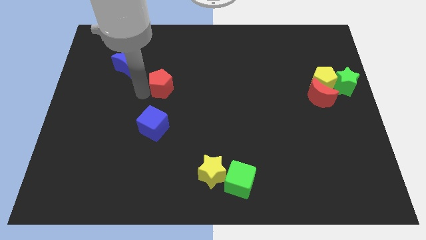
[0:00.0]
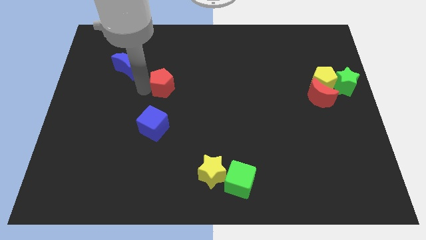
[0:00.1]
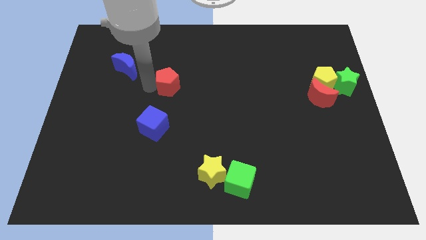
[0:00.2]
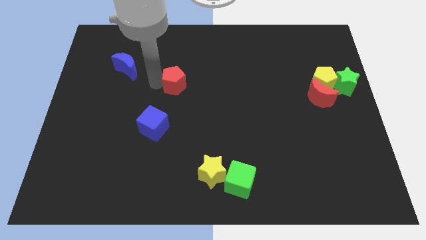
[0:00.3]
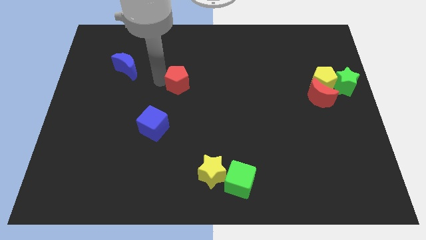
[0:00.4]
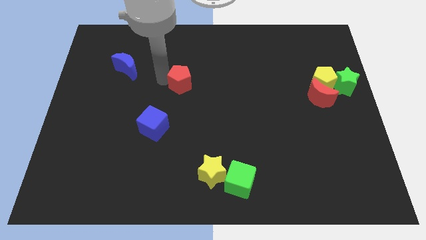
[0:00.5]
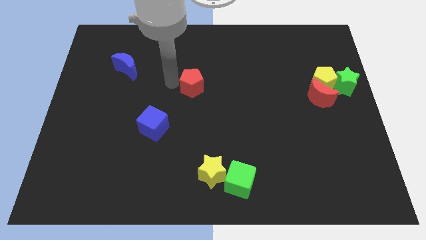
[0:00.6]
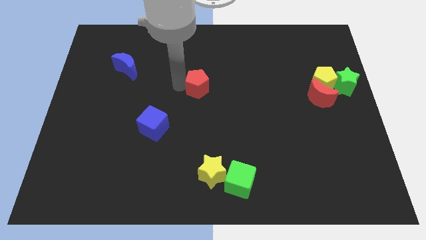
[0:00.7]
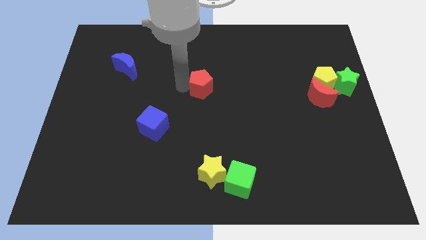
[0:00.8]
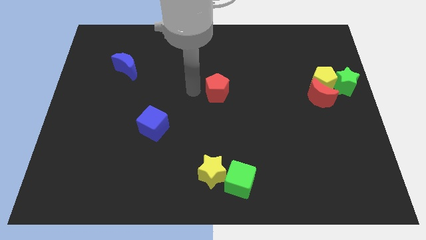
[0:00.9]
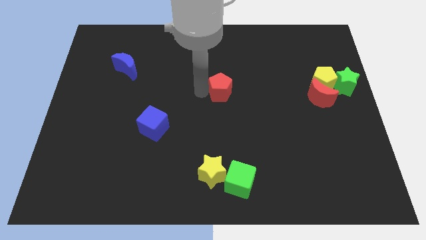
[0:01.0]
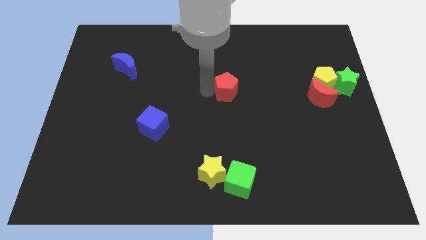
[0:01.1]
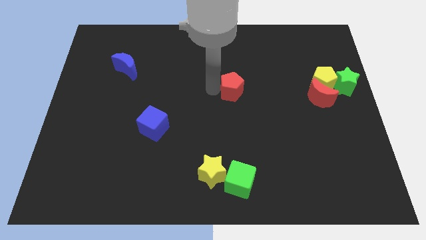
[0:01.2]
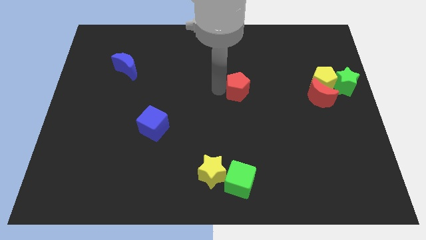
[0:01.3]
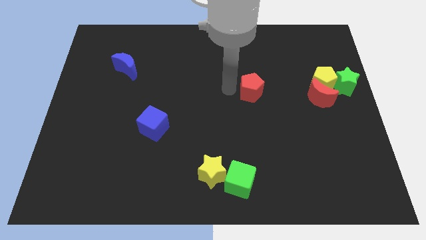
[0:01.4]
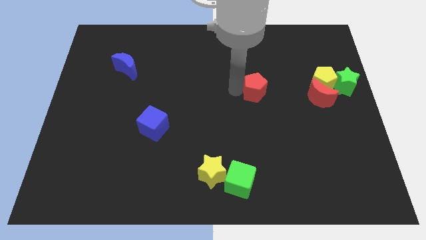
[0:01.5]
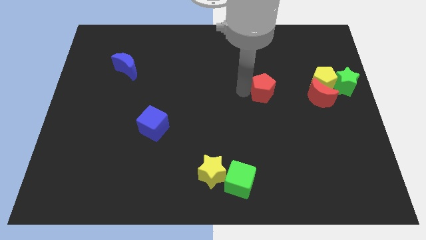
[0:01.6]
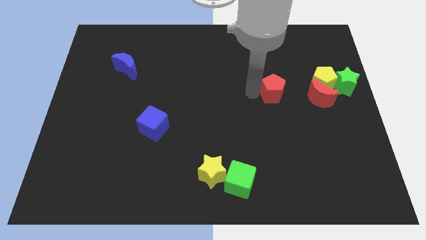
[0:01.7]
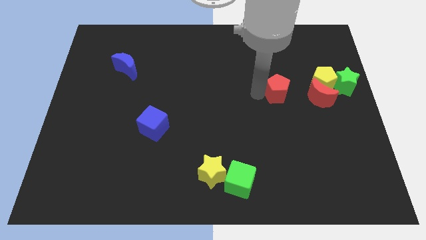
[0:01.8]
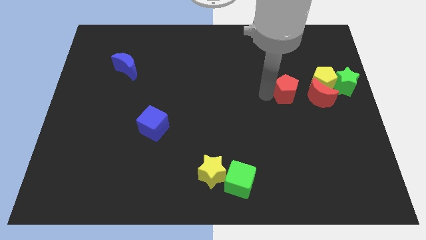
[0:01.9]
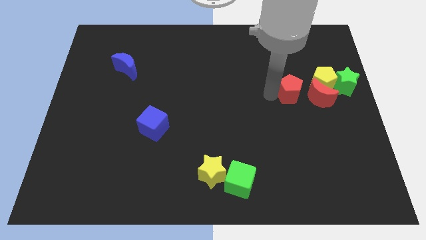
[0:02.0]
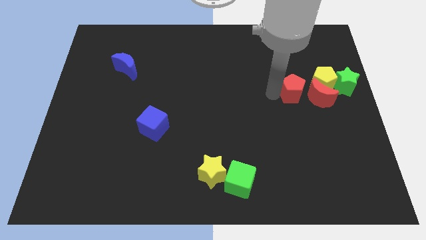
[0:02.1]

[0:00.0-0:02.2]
place red pentagon near red crescent

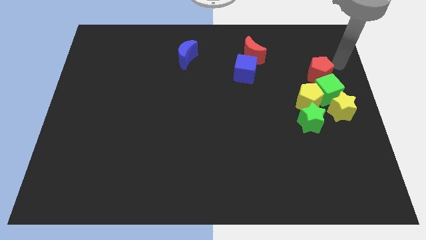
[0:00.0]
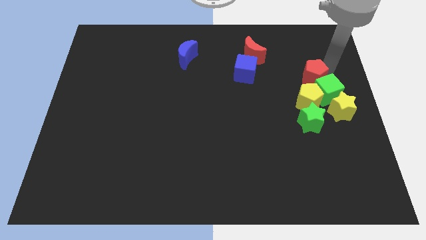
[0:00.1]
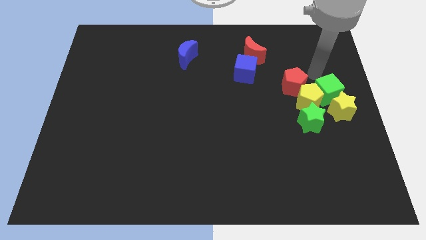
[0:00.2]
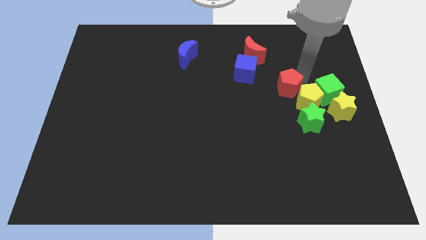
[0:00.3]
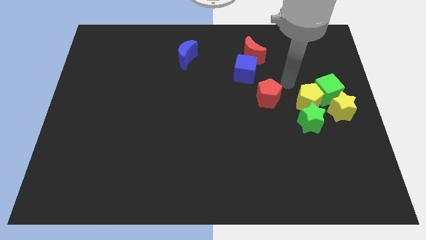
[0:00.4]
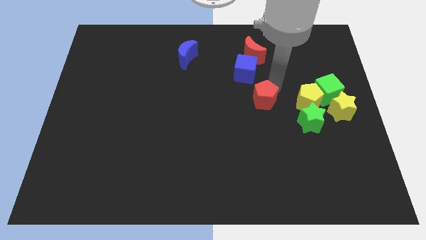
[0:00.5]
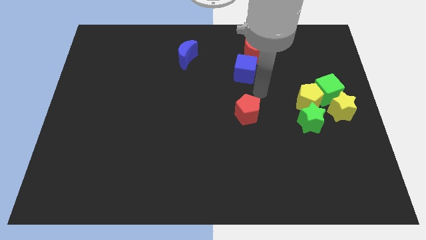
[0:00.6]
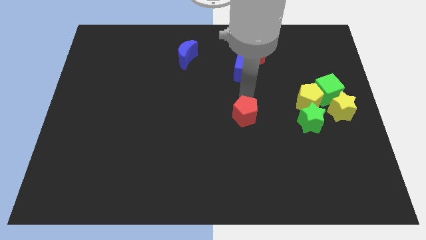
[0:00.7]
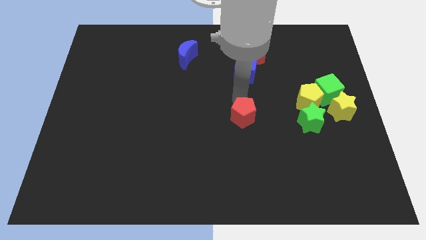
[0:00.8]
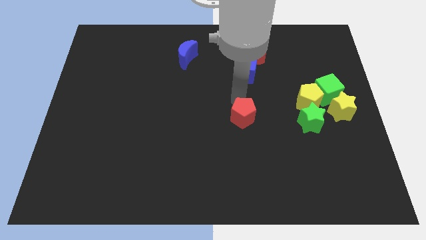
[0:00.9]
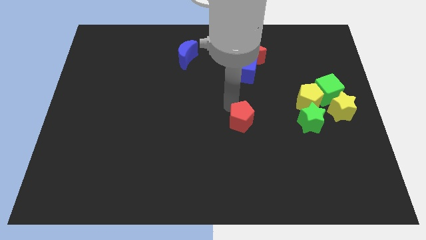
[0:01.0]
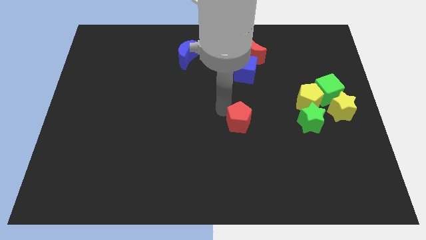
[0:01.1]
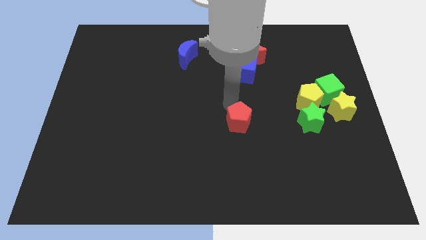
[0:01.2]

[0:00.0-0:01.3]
place the red pentagon vertically to the bottom side of the blue cube

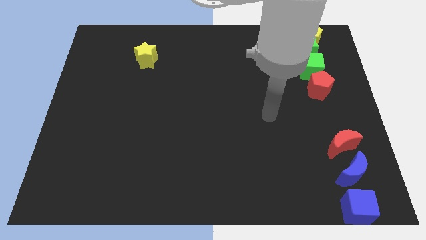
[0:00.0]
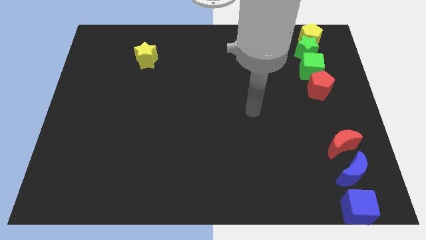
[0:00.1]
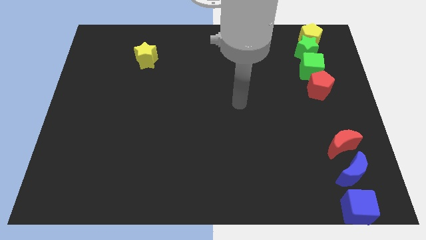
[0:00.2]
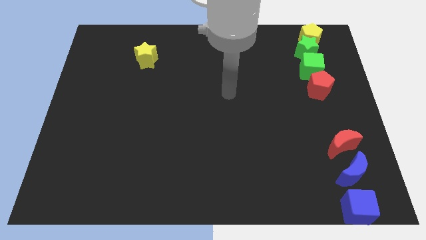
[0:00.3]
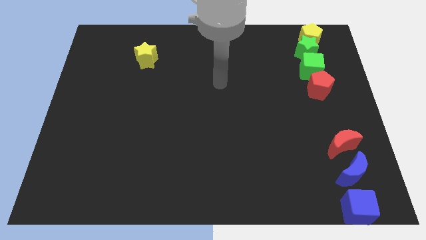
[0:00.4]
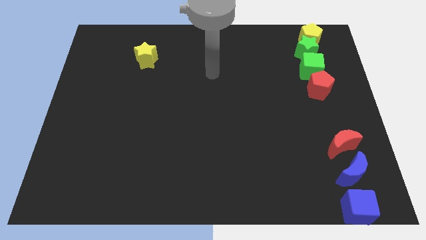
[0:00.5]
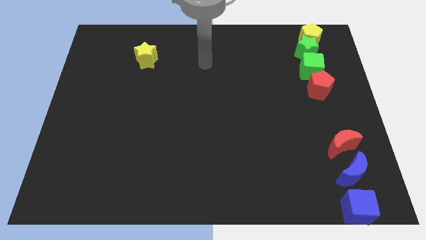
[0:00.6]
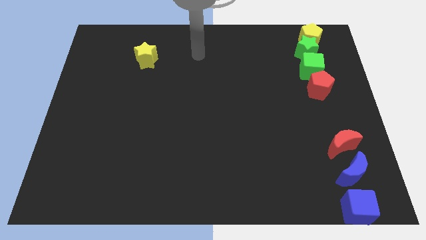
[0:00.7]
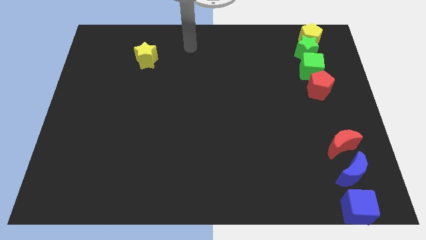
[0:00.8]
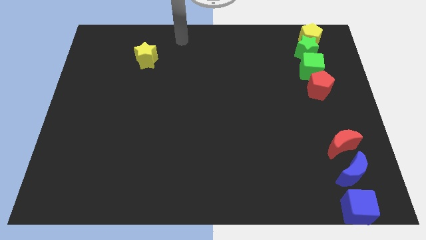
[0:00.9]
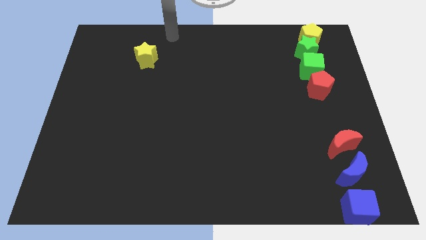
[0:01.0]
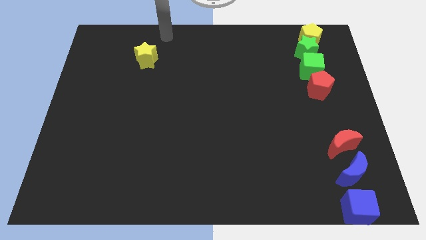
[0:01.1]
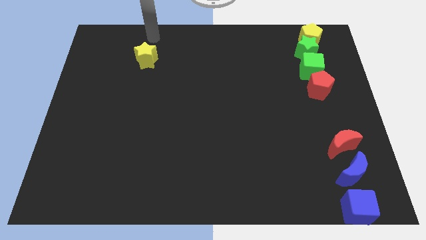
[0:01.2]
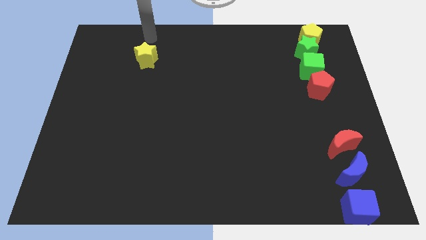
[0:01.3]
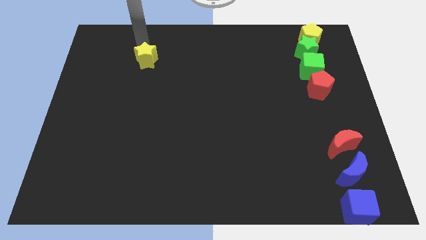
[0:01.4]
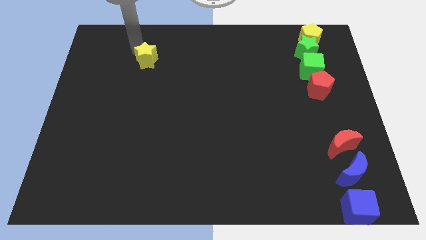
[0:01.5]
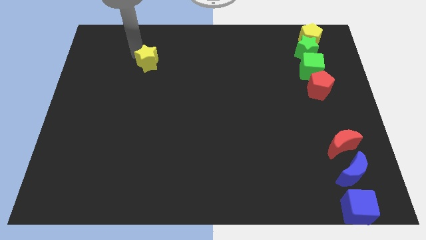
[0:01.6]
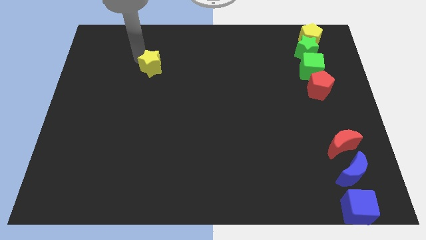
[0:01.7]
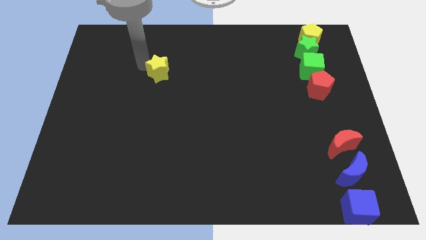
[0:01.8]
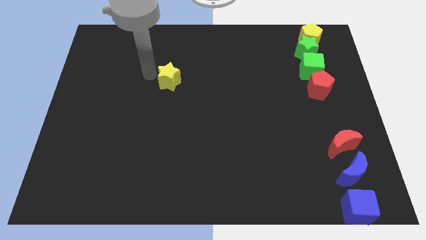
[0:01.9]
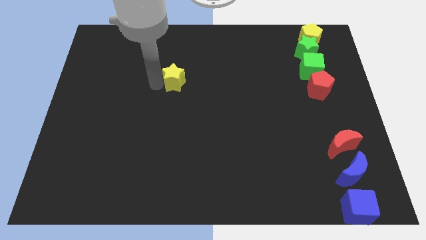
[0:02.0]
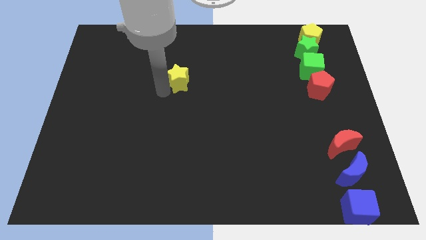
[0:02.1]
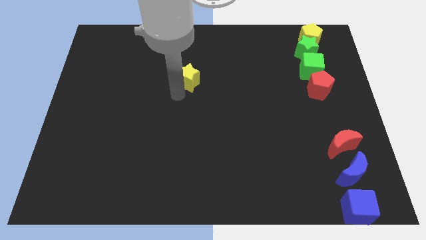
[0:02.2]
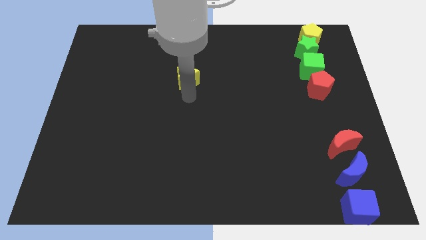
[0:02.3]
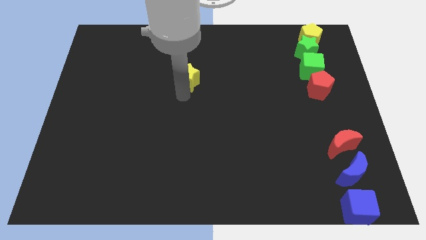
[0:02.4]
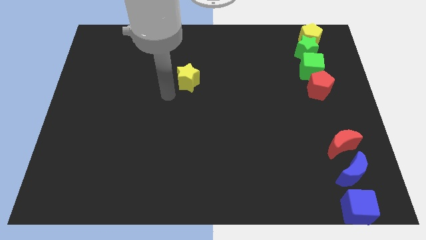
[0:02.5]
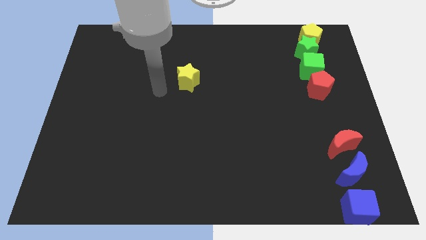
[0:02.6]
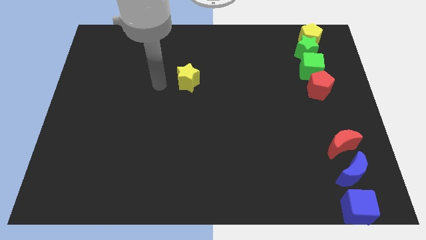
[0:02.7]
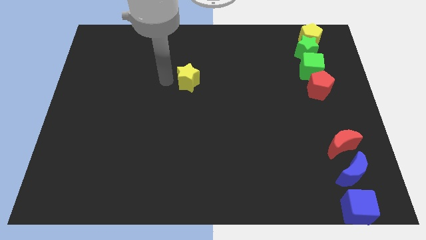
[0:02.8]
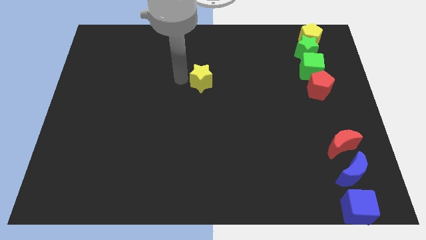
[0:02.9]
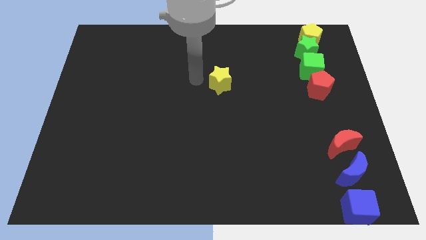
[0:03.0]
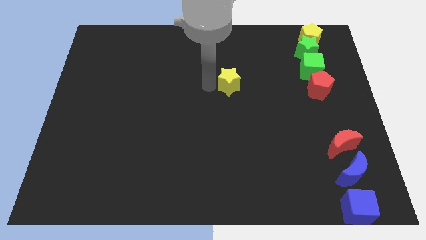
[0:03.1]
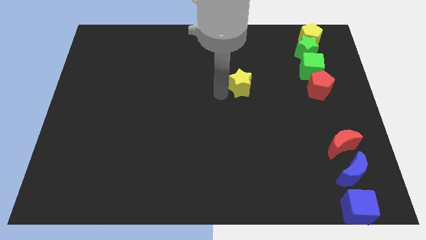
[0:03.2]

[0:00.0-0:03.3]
push the yellow star towards the center of the board

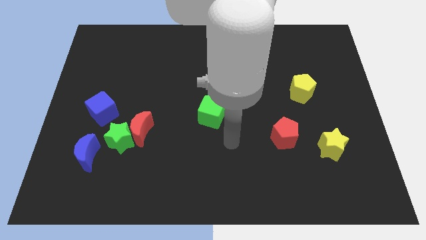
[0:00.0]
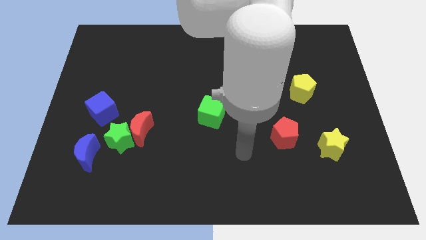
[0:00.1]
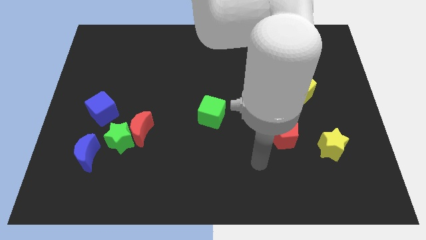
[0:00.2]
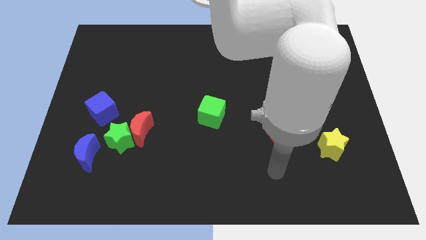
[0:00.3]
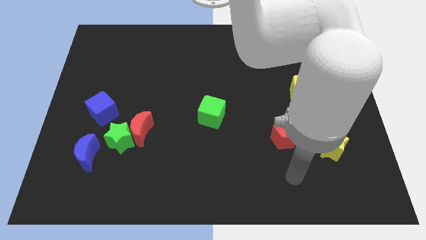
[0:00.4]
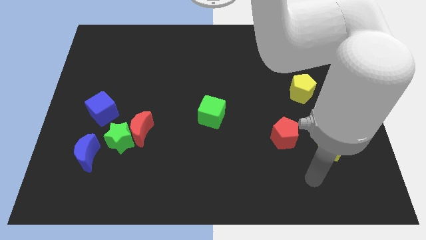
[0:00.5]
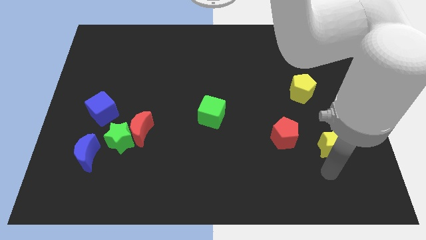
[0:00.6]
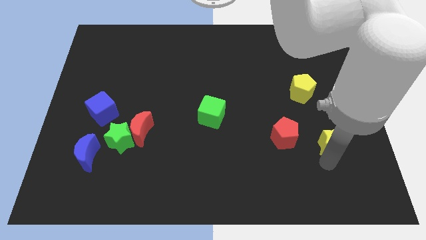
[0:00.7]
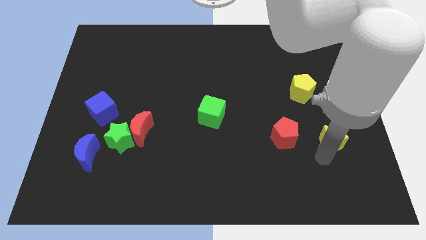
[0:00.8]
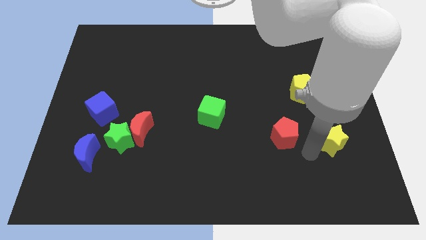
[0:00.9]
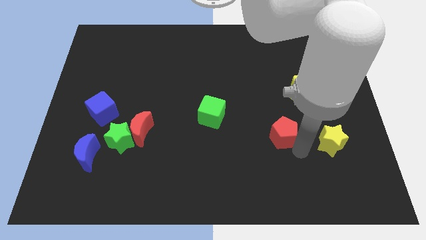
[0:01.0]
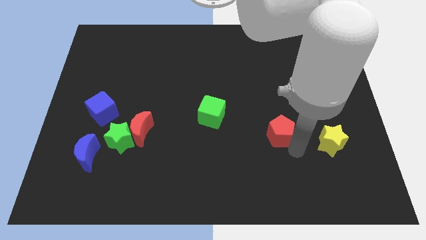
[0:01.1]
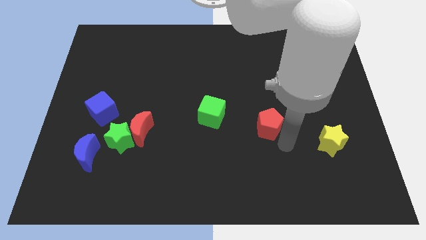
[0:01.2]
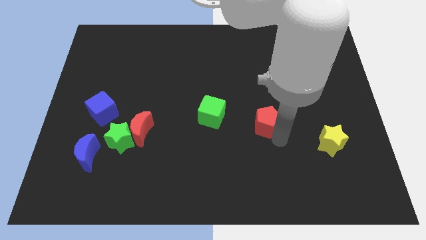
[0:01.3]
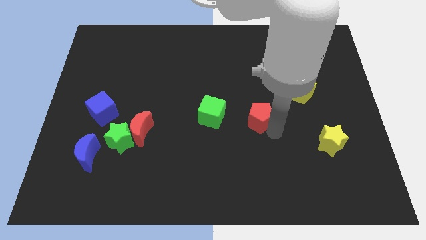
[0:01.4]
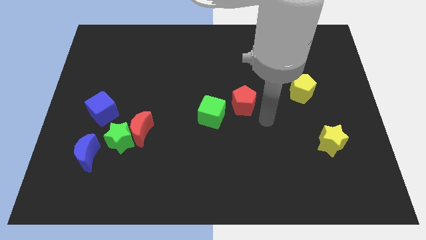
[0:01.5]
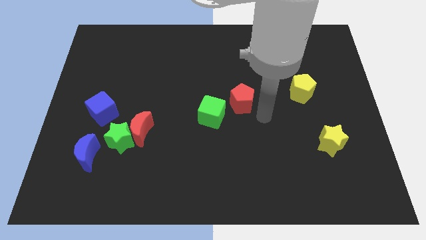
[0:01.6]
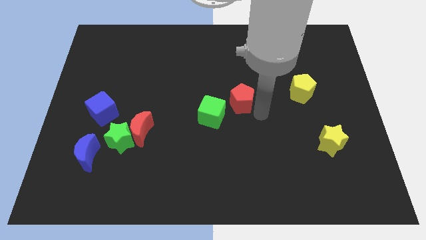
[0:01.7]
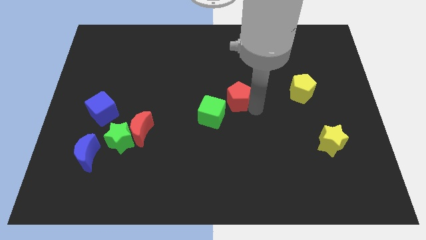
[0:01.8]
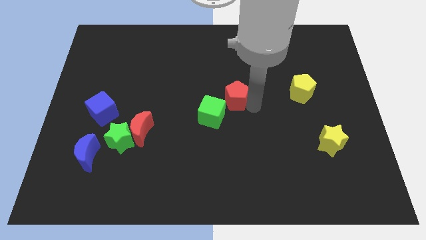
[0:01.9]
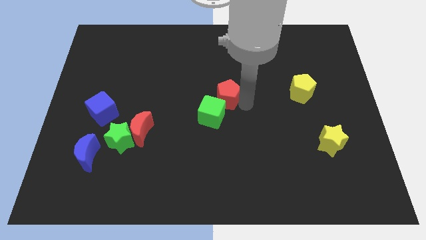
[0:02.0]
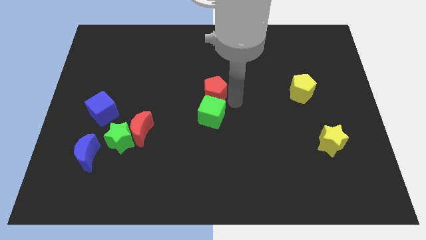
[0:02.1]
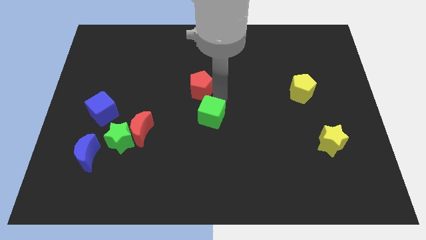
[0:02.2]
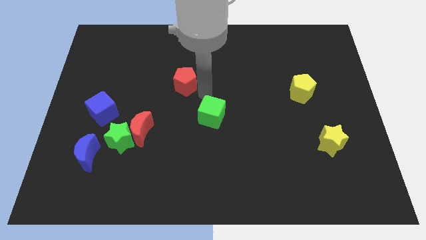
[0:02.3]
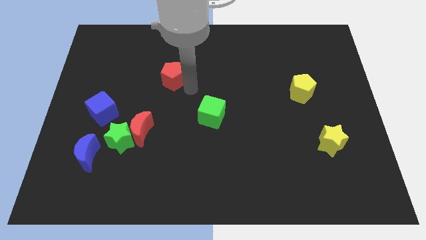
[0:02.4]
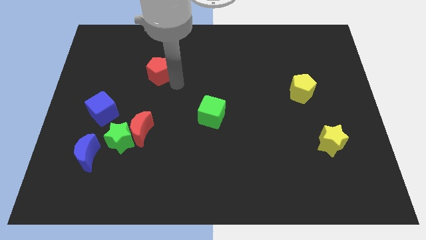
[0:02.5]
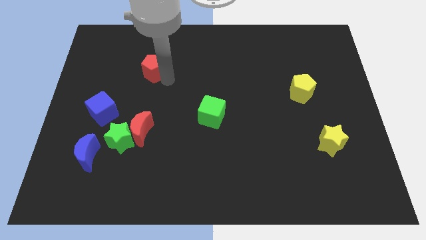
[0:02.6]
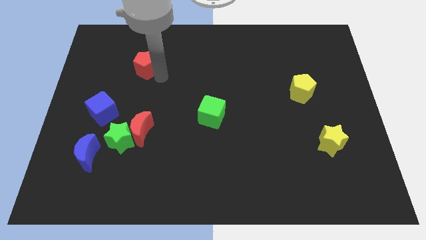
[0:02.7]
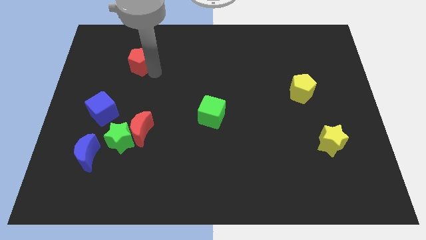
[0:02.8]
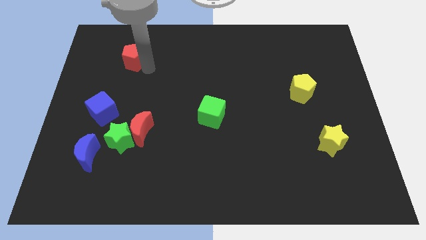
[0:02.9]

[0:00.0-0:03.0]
place the red pentagon diagonally to the top right of the blue cube
